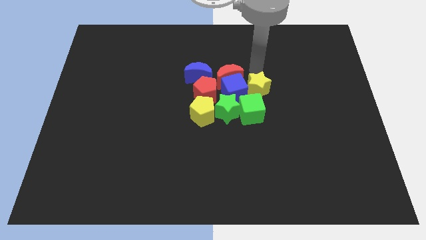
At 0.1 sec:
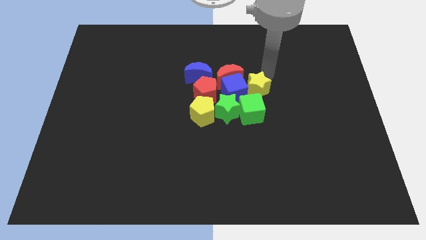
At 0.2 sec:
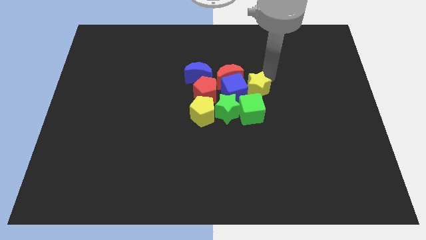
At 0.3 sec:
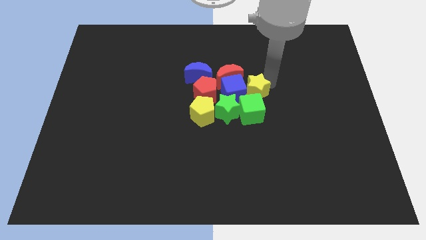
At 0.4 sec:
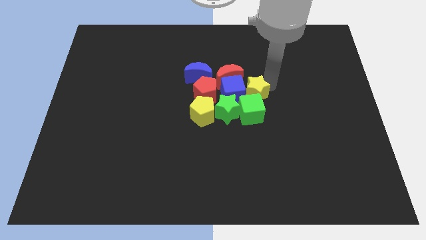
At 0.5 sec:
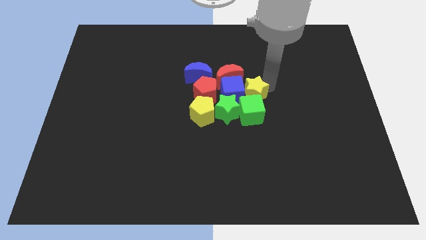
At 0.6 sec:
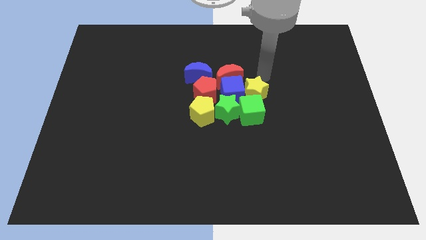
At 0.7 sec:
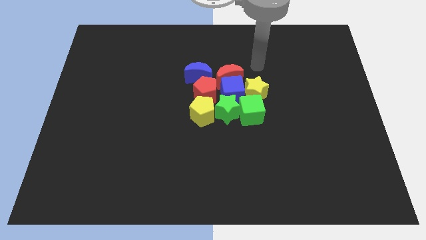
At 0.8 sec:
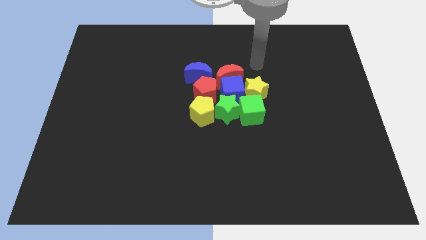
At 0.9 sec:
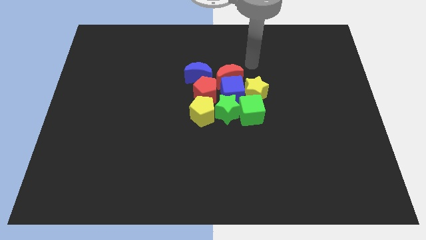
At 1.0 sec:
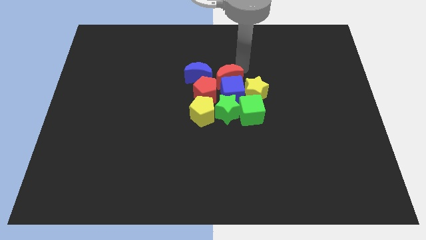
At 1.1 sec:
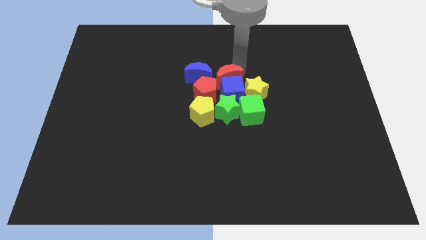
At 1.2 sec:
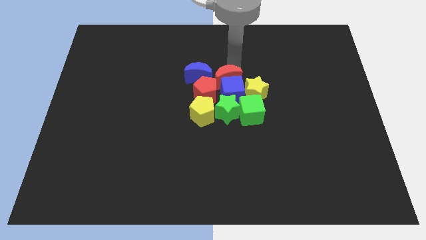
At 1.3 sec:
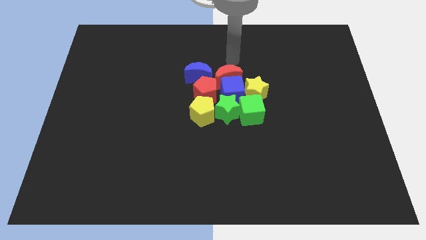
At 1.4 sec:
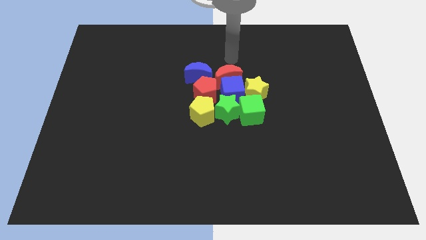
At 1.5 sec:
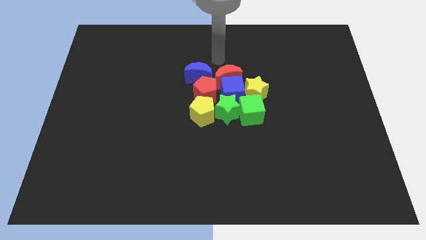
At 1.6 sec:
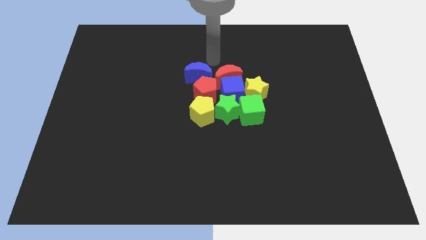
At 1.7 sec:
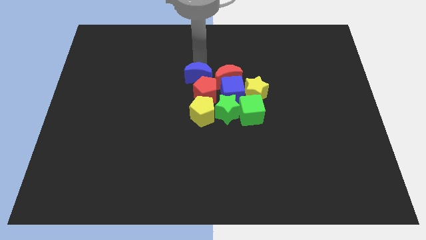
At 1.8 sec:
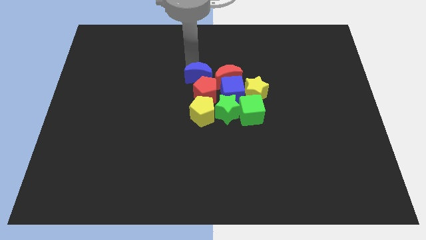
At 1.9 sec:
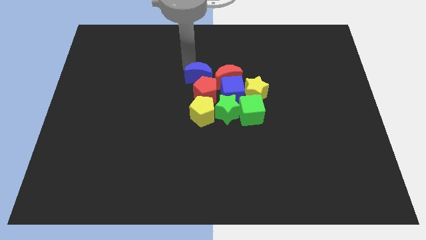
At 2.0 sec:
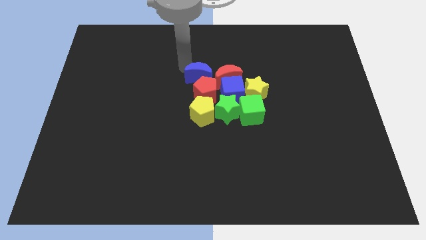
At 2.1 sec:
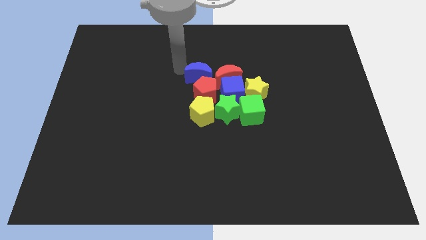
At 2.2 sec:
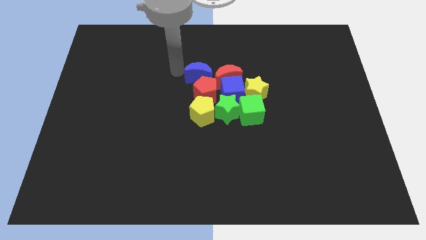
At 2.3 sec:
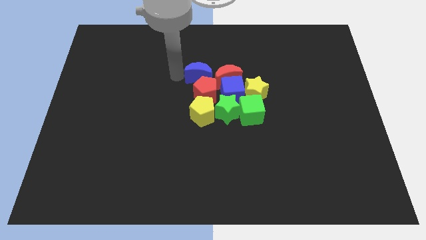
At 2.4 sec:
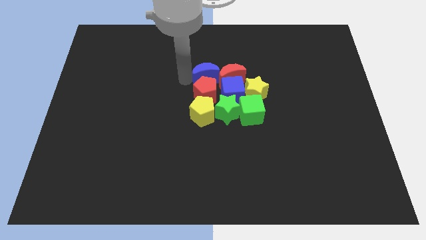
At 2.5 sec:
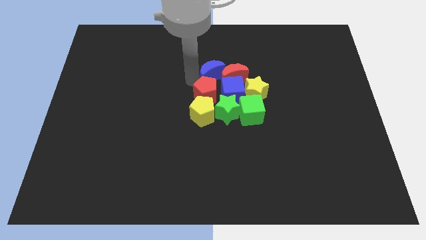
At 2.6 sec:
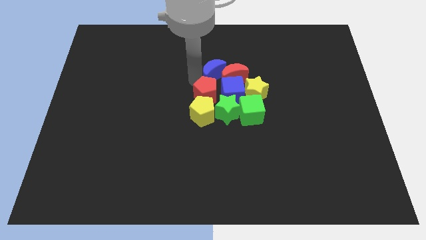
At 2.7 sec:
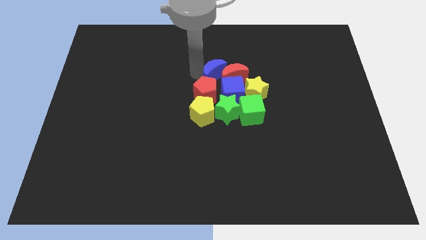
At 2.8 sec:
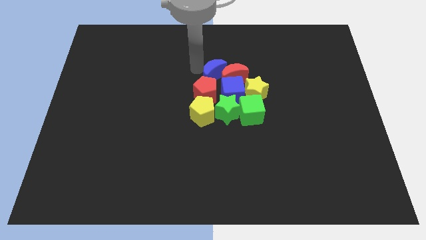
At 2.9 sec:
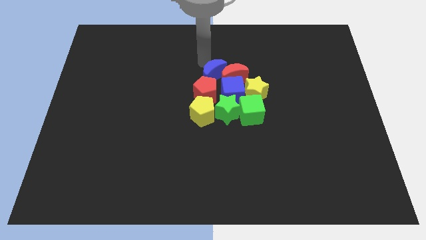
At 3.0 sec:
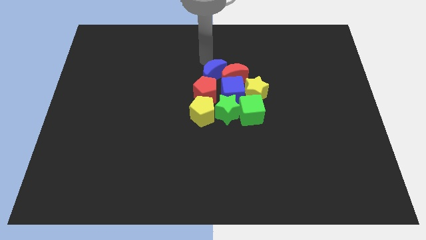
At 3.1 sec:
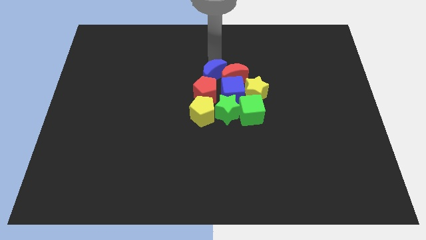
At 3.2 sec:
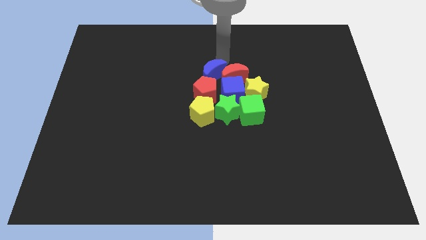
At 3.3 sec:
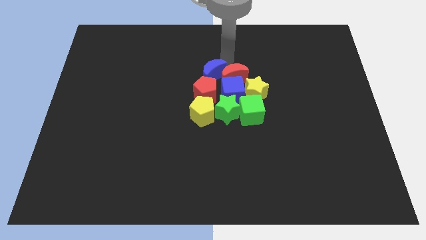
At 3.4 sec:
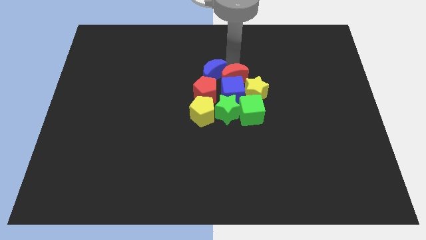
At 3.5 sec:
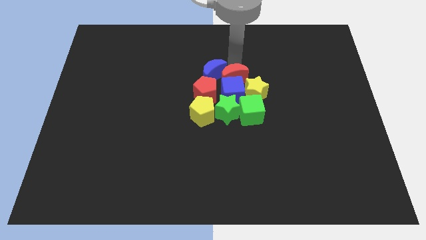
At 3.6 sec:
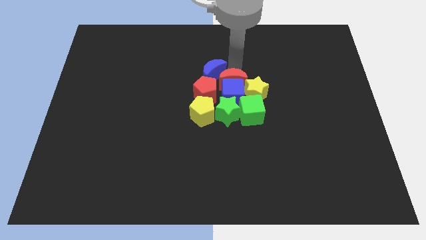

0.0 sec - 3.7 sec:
move the red moon to the top side of the red blocks

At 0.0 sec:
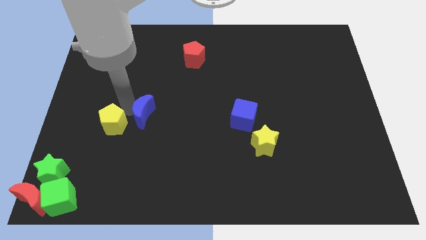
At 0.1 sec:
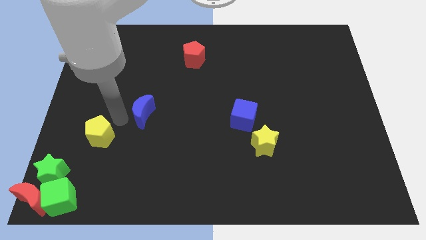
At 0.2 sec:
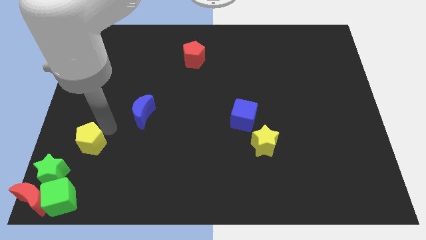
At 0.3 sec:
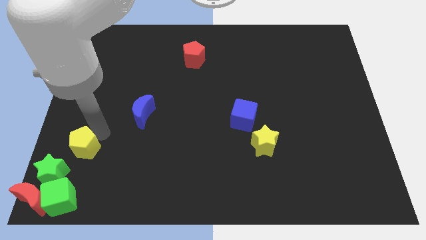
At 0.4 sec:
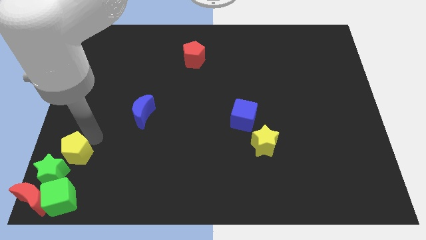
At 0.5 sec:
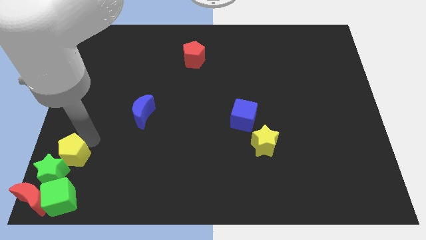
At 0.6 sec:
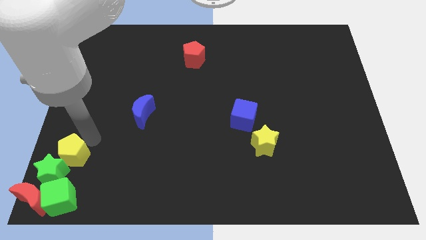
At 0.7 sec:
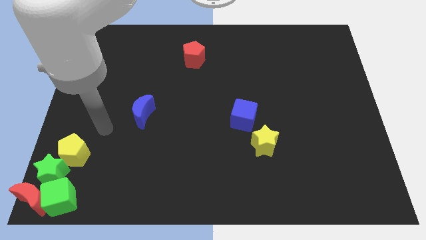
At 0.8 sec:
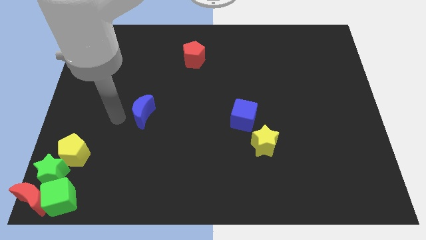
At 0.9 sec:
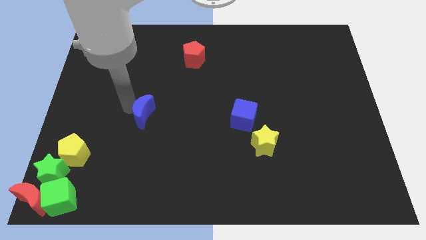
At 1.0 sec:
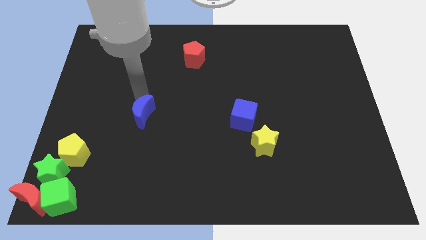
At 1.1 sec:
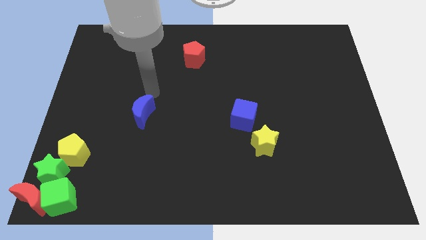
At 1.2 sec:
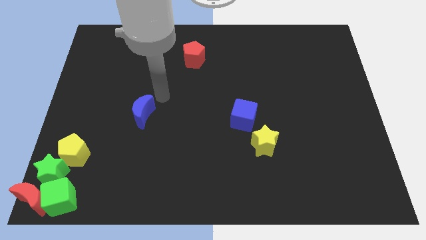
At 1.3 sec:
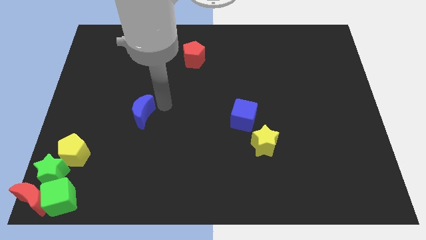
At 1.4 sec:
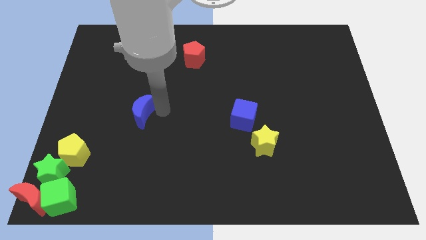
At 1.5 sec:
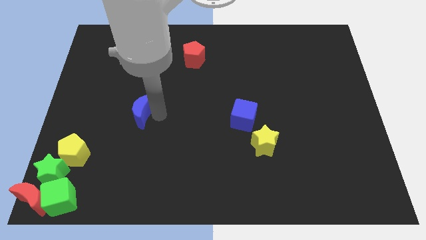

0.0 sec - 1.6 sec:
place the yellow pentagon above the green star

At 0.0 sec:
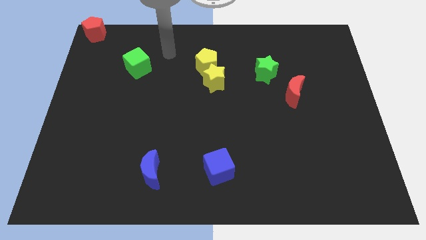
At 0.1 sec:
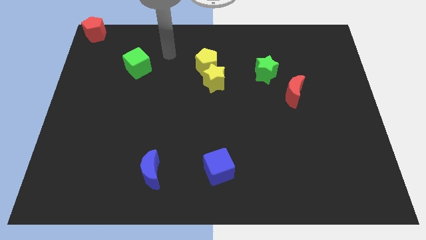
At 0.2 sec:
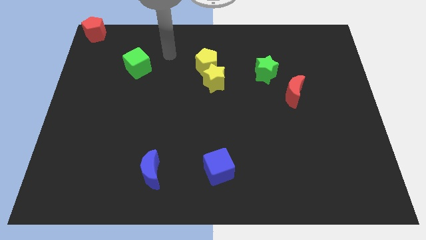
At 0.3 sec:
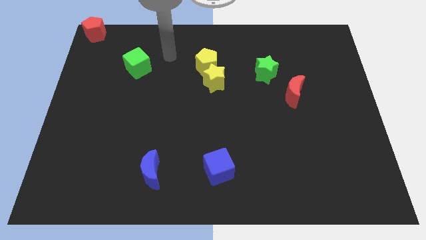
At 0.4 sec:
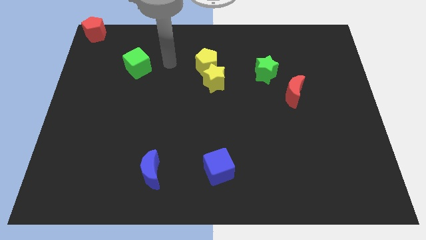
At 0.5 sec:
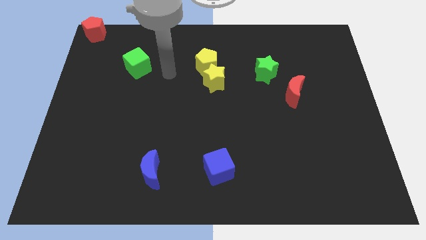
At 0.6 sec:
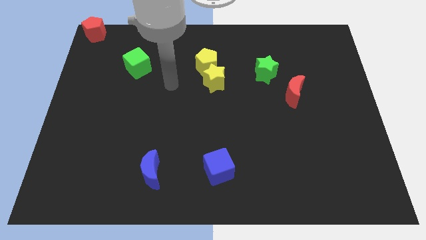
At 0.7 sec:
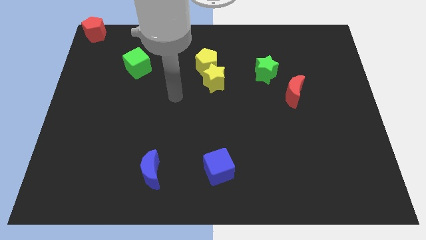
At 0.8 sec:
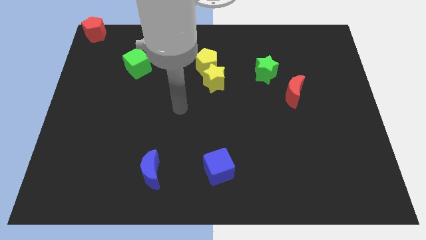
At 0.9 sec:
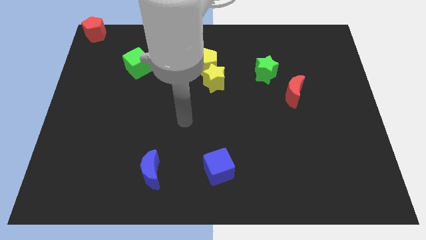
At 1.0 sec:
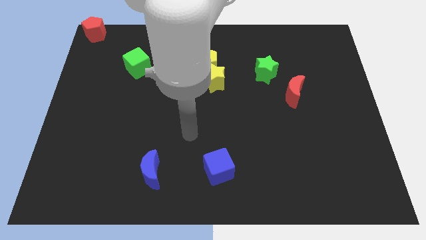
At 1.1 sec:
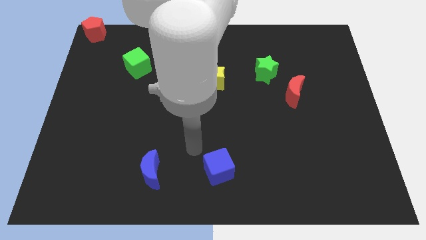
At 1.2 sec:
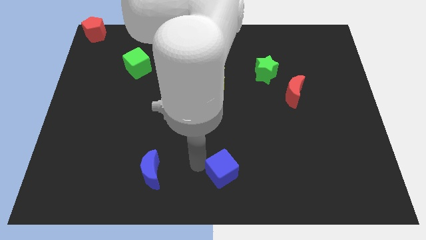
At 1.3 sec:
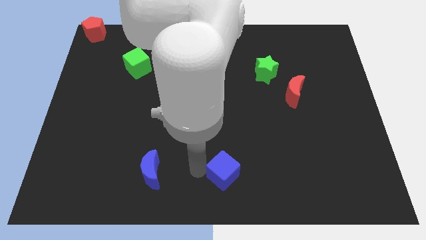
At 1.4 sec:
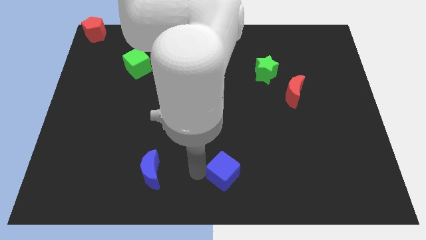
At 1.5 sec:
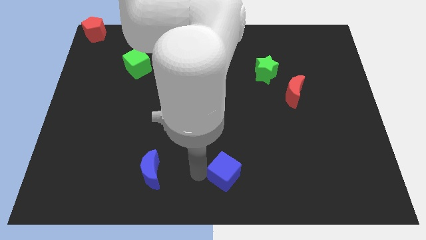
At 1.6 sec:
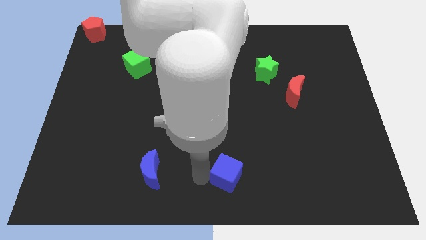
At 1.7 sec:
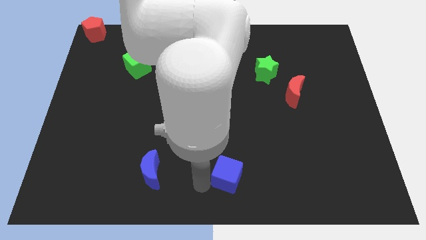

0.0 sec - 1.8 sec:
move the arm to the right side of the blue cube

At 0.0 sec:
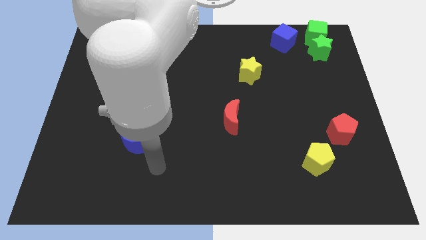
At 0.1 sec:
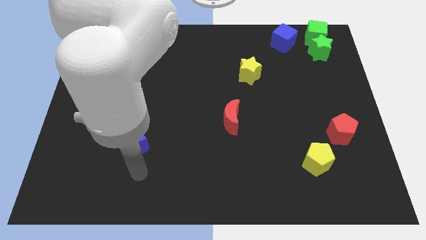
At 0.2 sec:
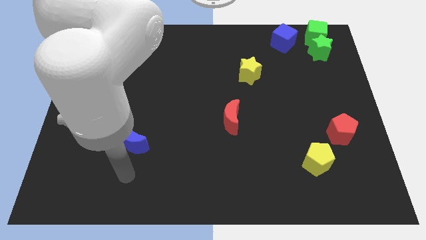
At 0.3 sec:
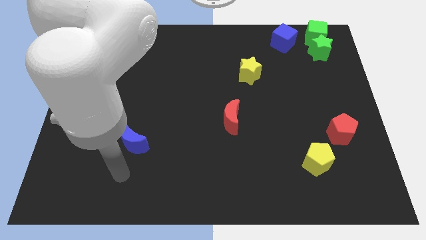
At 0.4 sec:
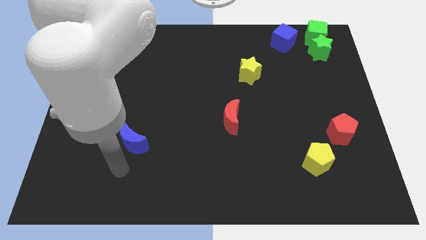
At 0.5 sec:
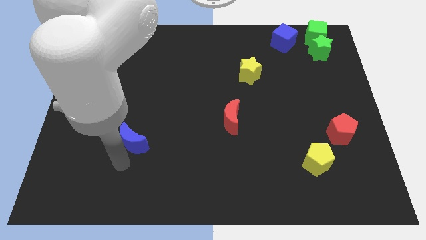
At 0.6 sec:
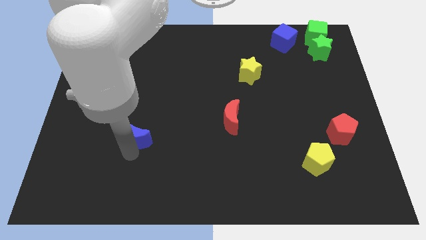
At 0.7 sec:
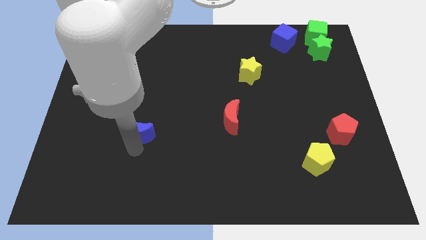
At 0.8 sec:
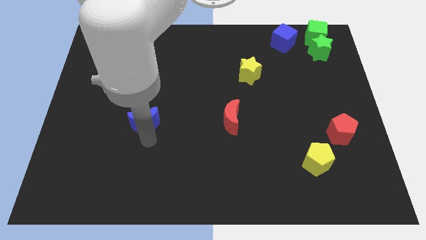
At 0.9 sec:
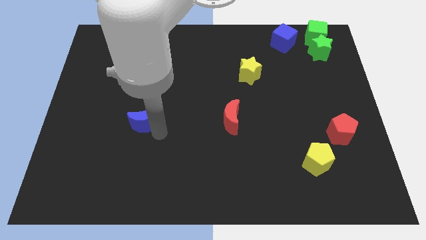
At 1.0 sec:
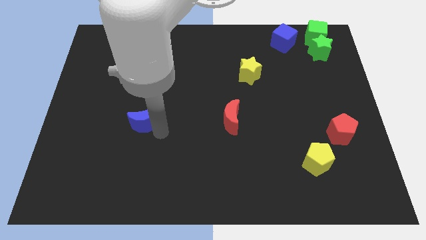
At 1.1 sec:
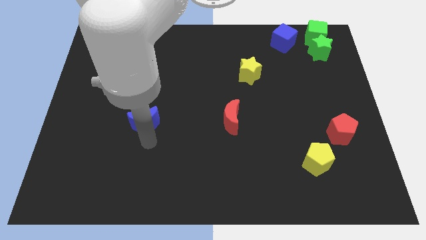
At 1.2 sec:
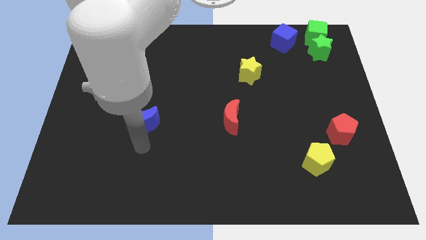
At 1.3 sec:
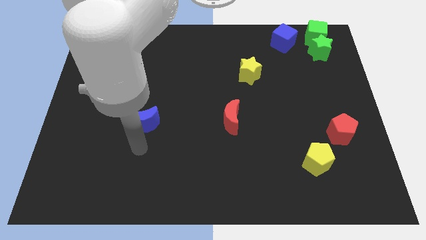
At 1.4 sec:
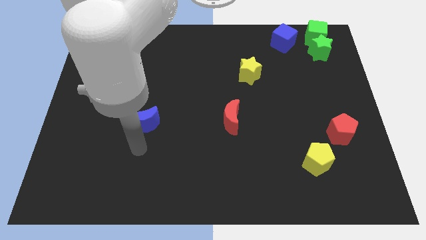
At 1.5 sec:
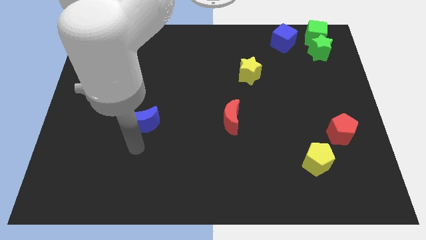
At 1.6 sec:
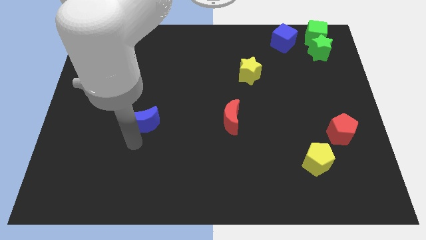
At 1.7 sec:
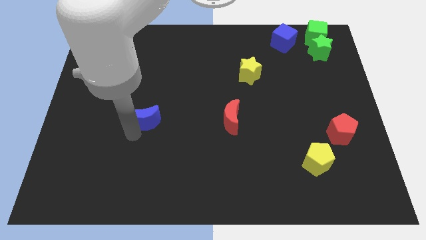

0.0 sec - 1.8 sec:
push the blue moon towards the top of the board

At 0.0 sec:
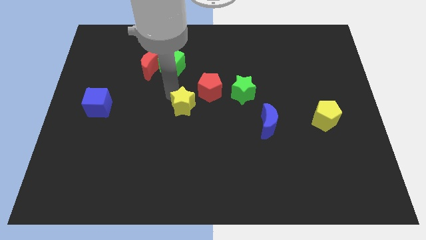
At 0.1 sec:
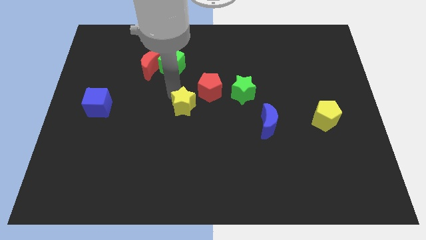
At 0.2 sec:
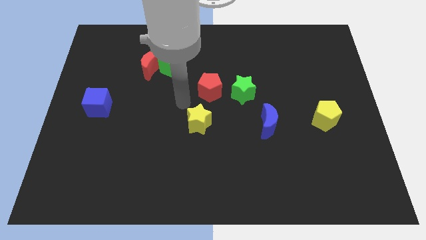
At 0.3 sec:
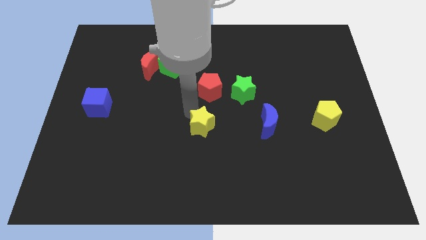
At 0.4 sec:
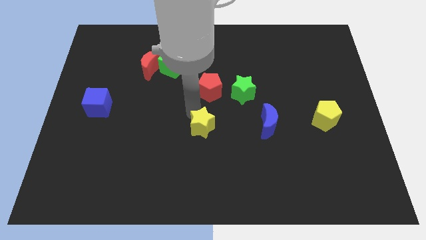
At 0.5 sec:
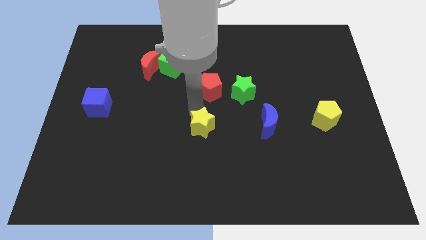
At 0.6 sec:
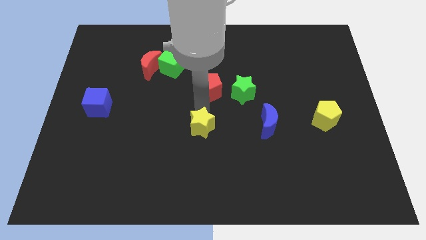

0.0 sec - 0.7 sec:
push the yellow star to the center of the board
